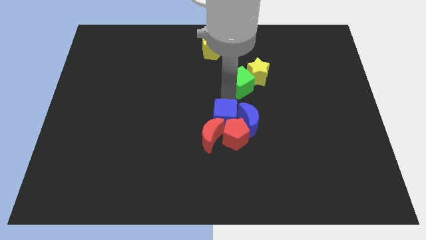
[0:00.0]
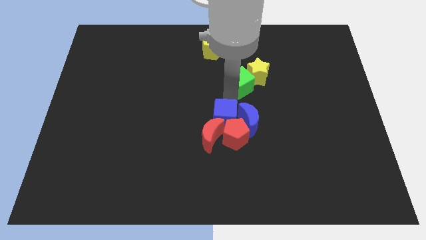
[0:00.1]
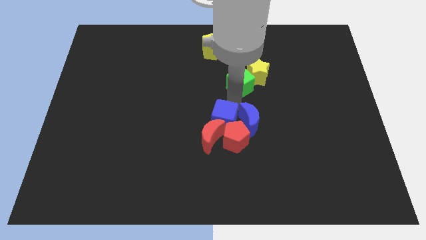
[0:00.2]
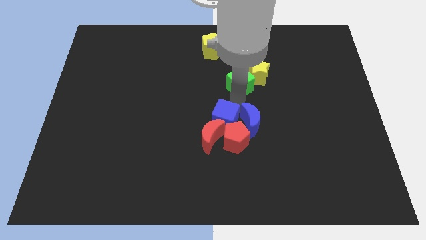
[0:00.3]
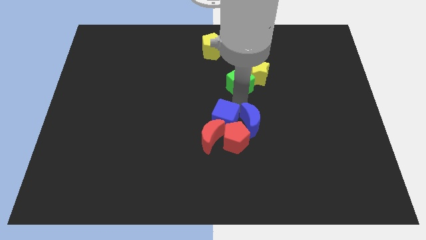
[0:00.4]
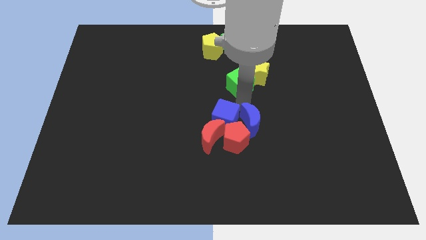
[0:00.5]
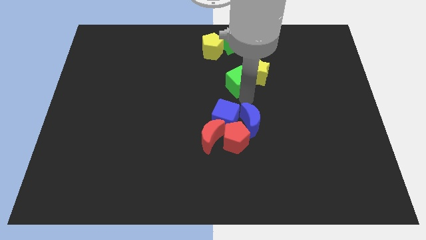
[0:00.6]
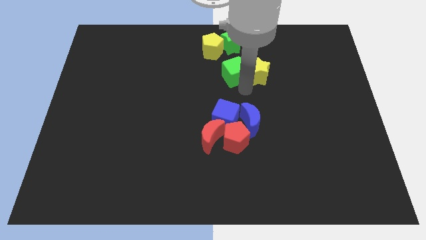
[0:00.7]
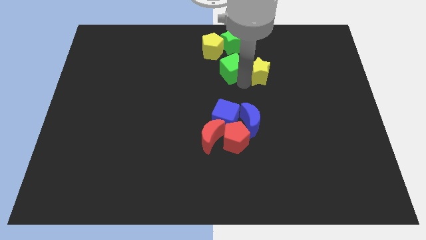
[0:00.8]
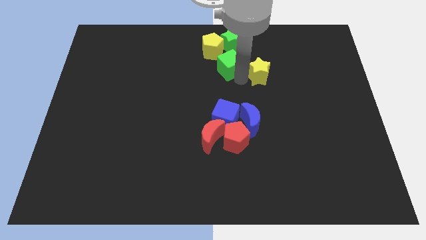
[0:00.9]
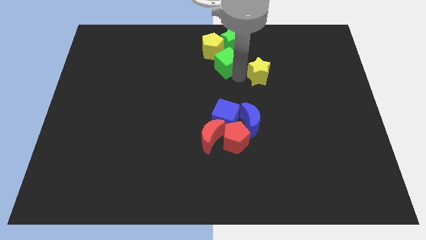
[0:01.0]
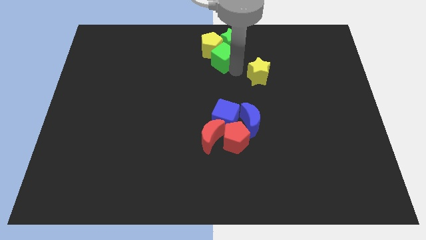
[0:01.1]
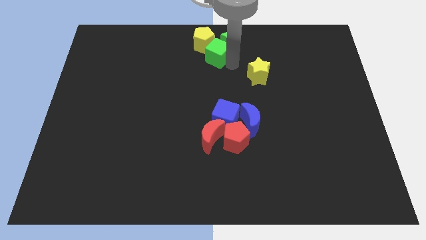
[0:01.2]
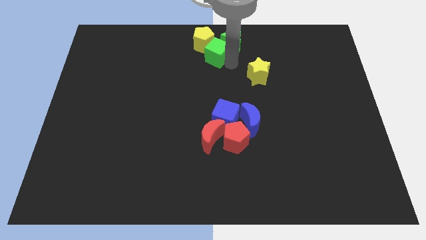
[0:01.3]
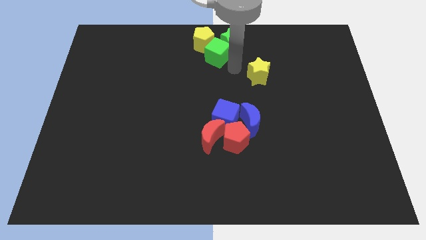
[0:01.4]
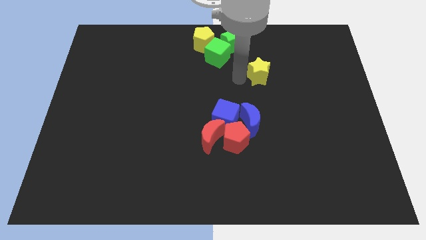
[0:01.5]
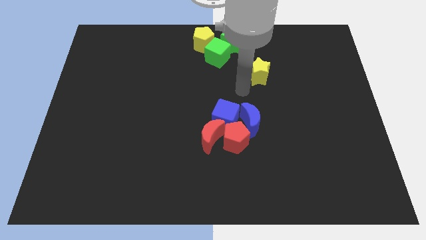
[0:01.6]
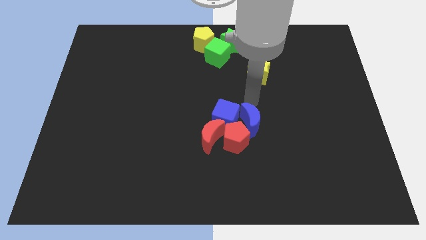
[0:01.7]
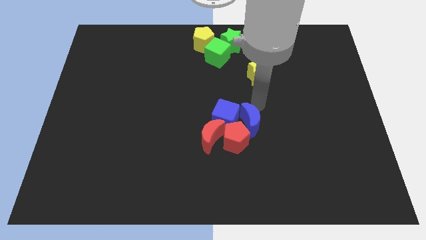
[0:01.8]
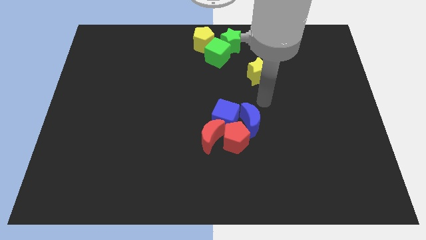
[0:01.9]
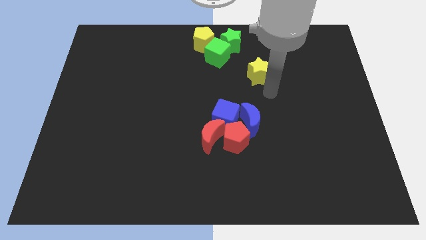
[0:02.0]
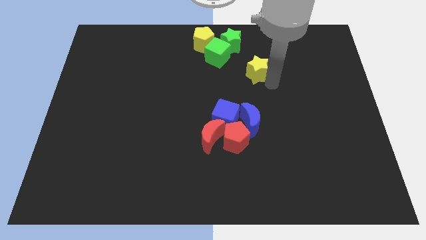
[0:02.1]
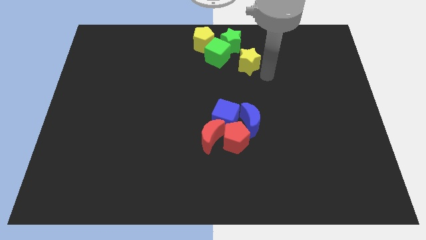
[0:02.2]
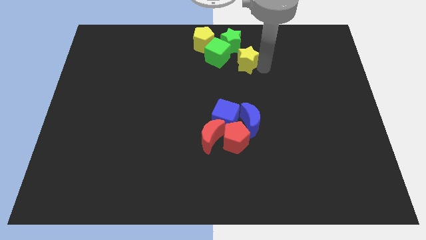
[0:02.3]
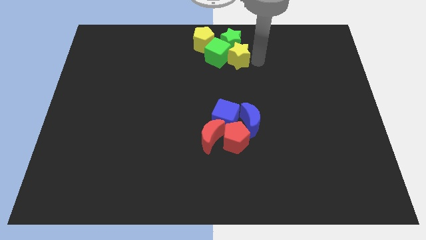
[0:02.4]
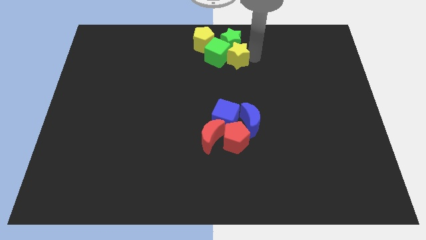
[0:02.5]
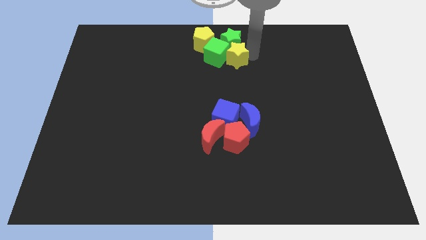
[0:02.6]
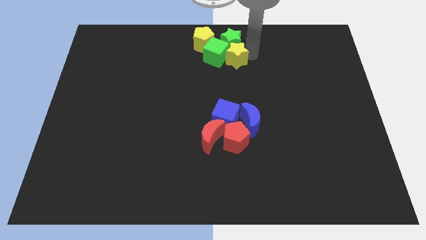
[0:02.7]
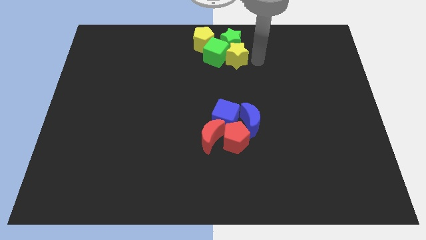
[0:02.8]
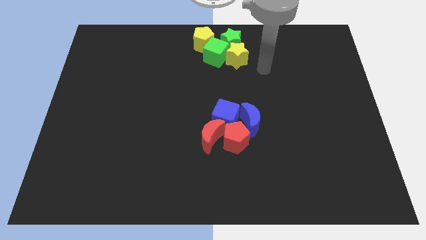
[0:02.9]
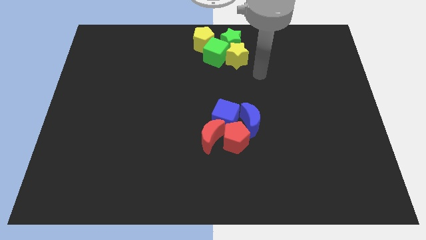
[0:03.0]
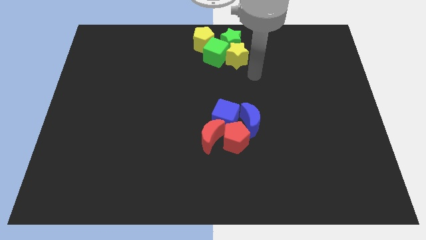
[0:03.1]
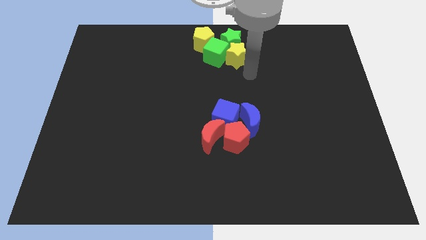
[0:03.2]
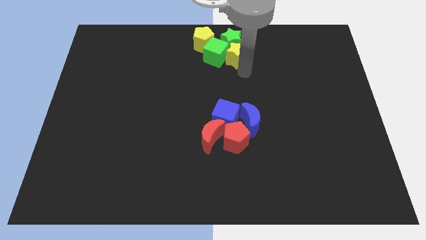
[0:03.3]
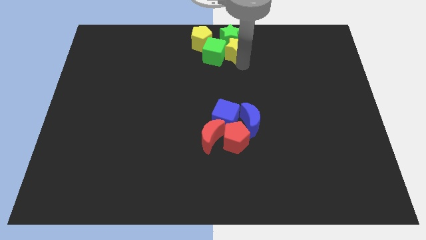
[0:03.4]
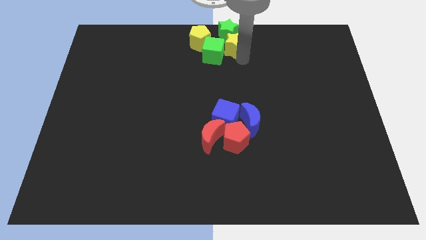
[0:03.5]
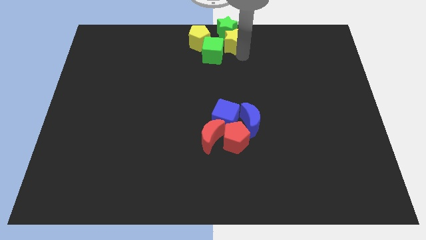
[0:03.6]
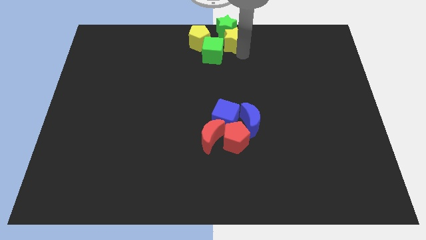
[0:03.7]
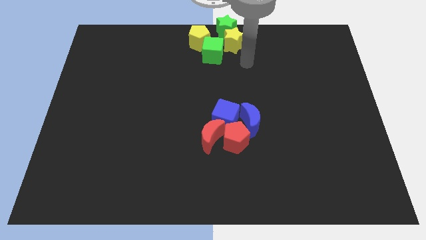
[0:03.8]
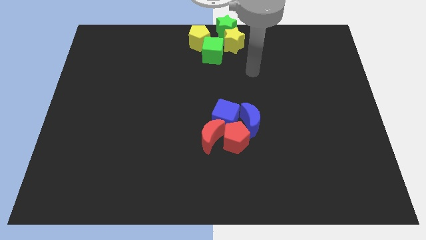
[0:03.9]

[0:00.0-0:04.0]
push the green star and yellow star to the top center

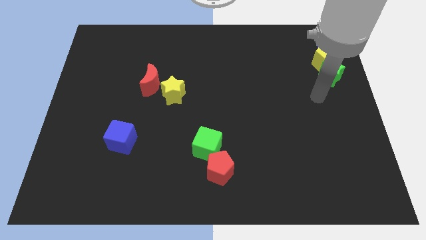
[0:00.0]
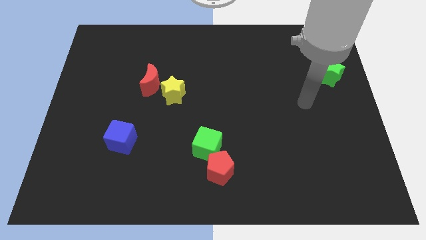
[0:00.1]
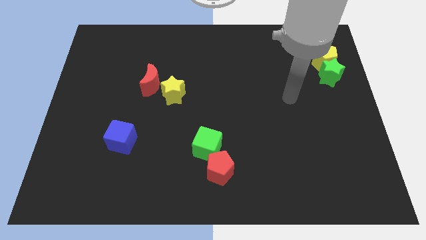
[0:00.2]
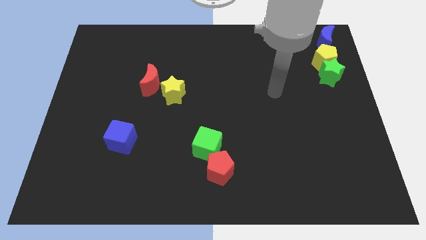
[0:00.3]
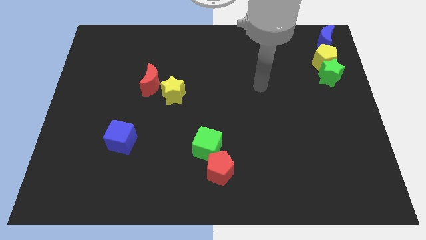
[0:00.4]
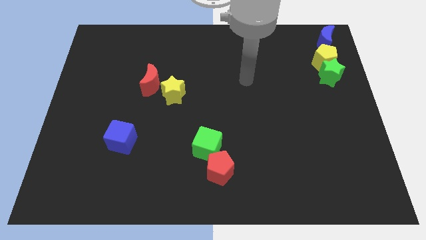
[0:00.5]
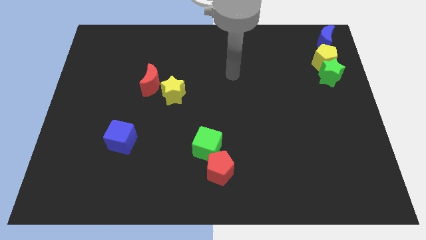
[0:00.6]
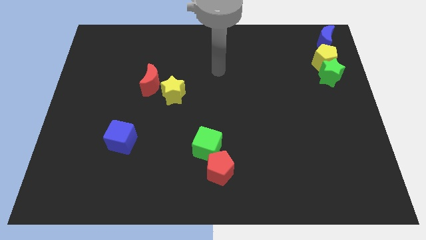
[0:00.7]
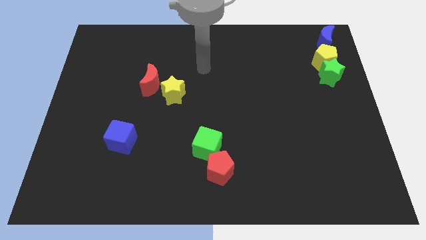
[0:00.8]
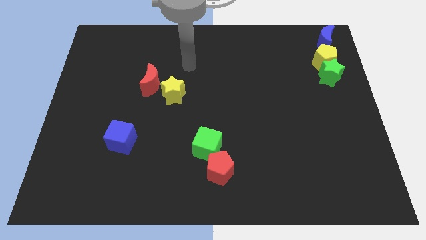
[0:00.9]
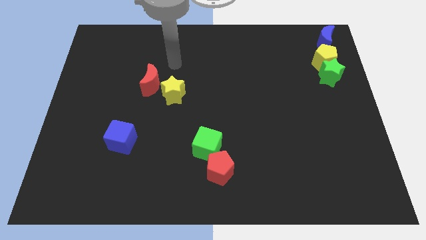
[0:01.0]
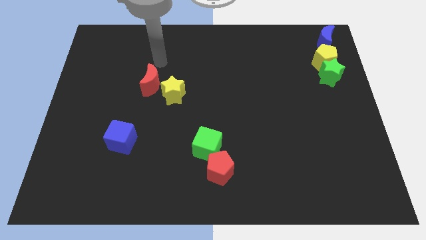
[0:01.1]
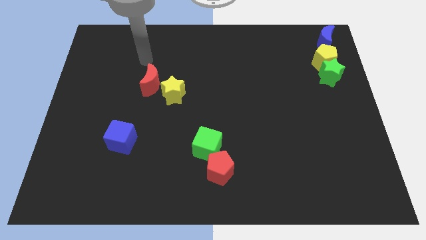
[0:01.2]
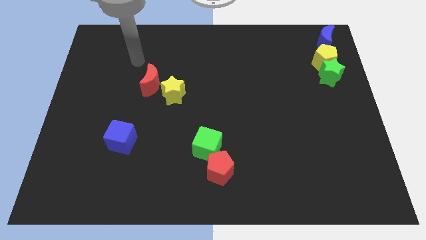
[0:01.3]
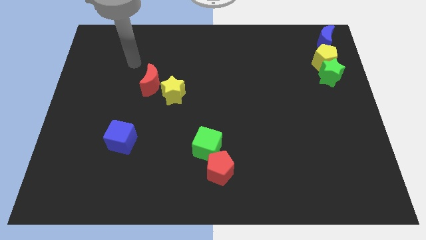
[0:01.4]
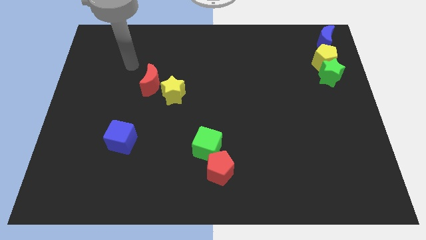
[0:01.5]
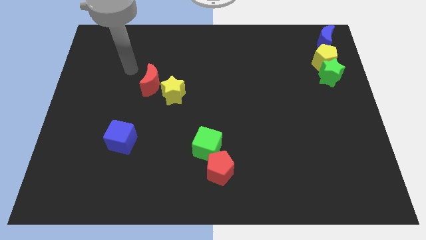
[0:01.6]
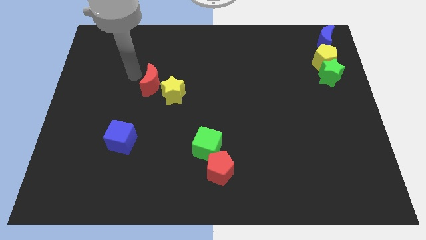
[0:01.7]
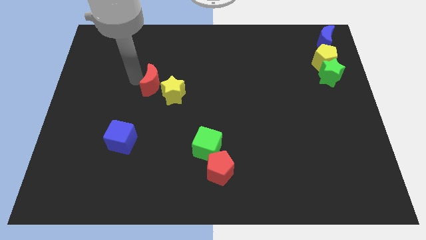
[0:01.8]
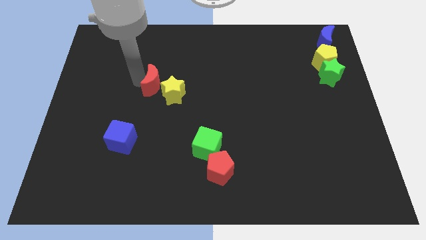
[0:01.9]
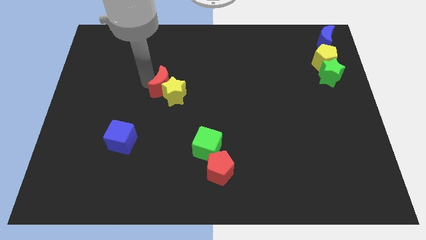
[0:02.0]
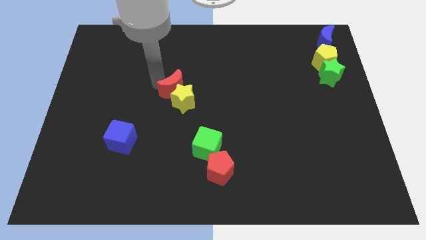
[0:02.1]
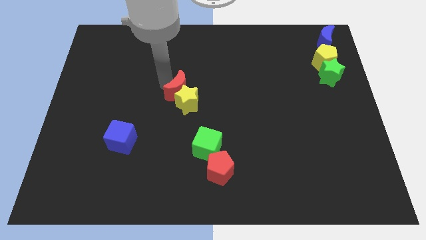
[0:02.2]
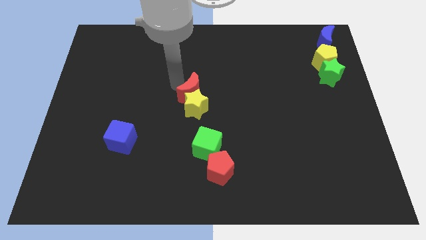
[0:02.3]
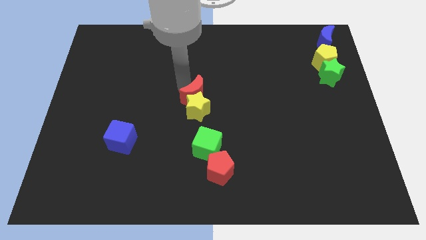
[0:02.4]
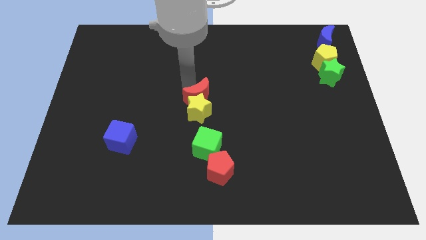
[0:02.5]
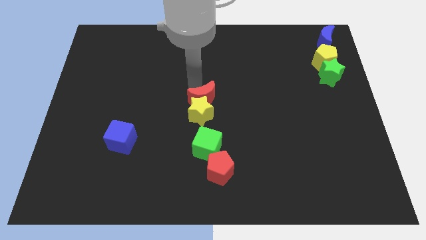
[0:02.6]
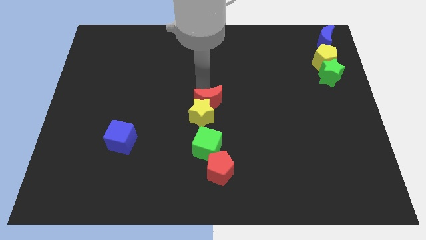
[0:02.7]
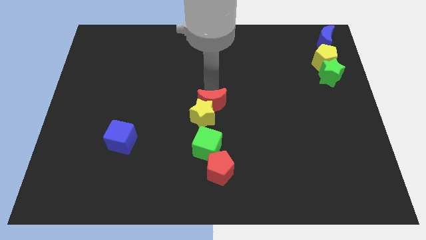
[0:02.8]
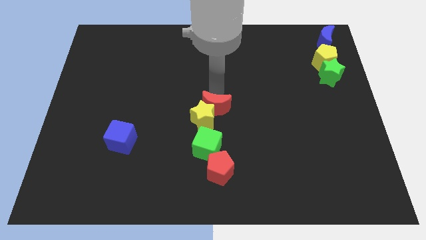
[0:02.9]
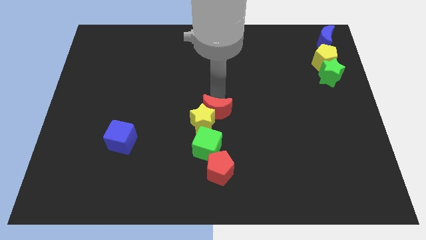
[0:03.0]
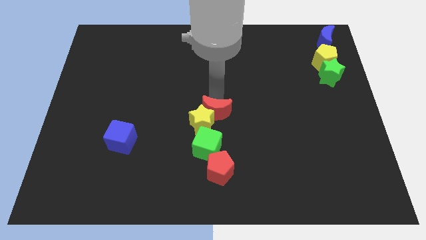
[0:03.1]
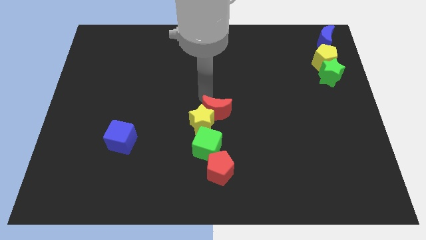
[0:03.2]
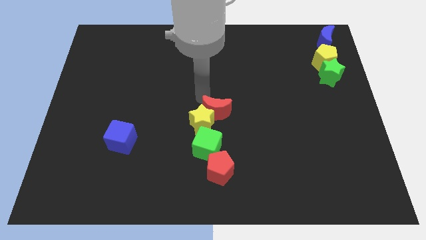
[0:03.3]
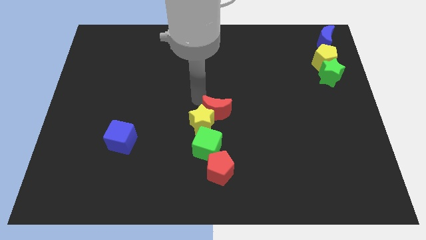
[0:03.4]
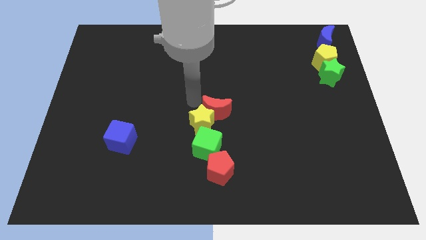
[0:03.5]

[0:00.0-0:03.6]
push the red crescent and yellow star towards the green cube

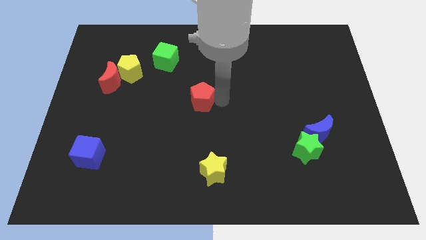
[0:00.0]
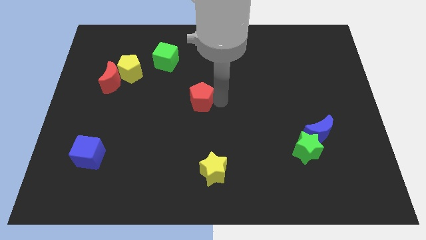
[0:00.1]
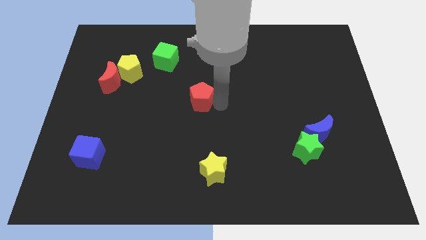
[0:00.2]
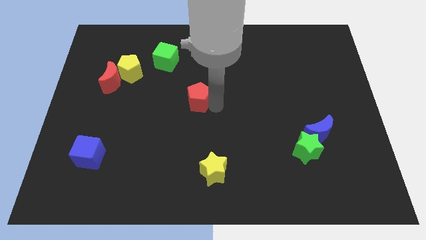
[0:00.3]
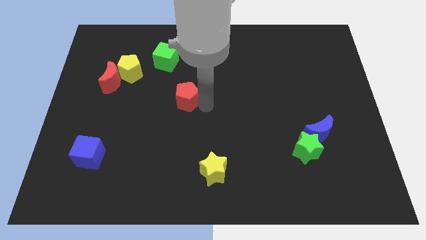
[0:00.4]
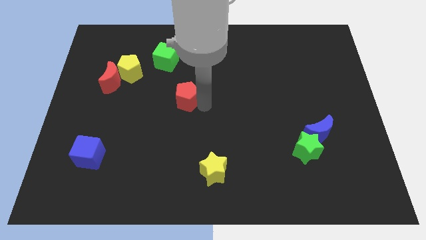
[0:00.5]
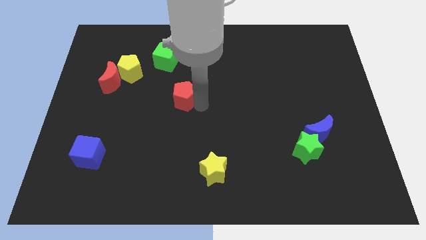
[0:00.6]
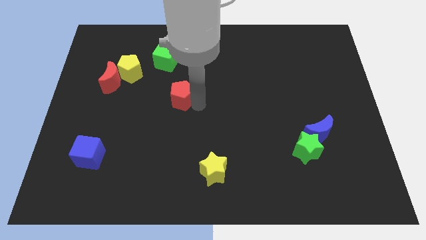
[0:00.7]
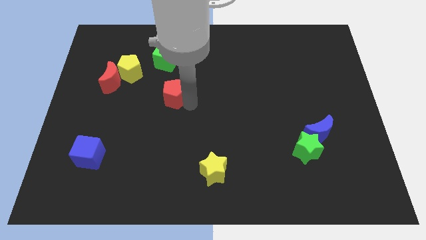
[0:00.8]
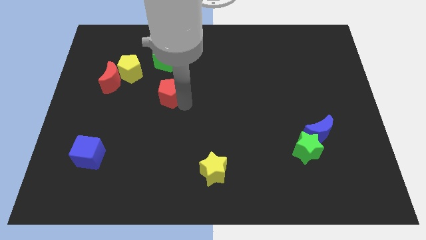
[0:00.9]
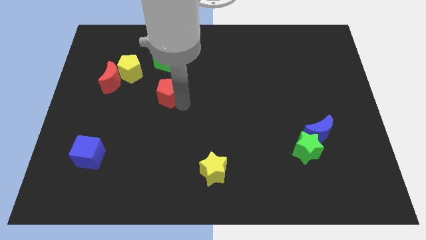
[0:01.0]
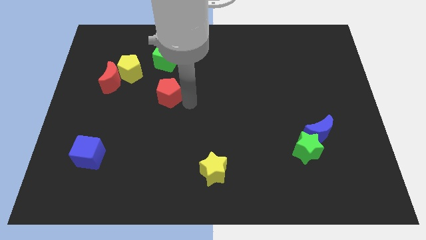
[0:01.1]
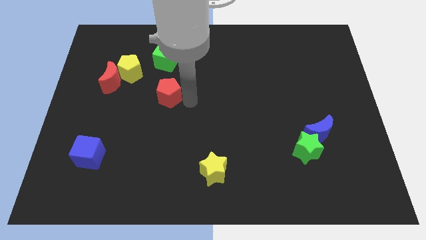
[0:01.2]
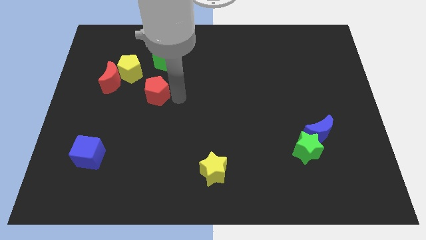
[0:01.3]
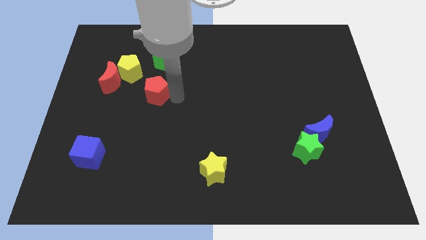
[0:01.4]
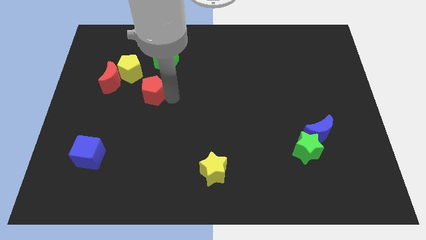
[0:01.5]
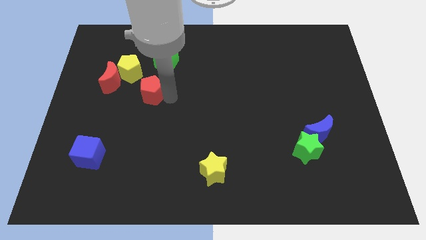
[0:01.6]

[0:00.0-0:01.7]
place the red pentagon diagonal to the yellow pentagon
